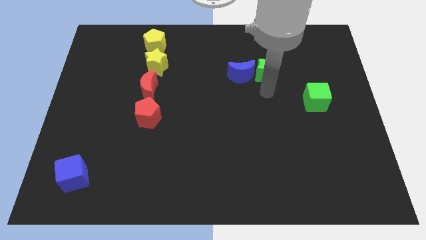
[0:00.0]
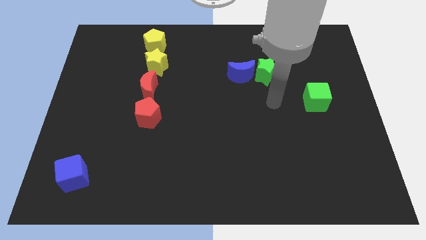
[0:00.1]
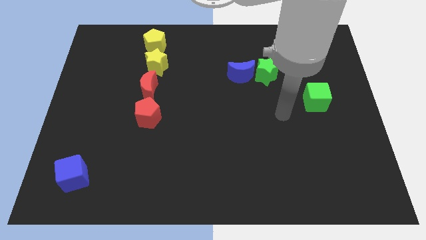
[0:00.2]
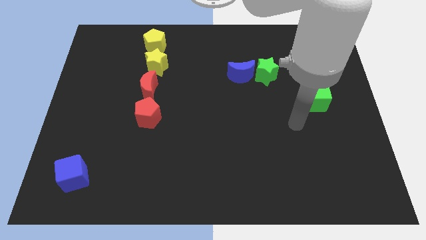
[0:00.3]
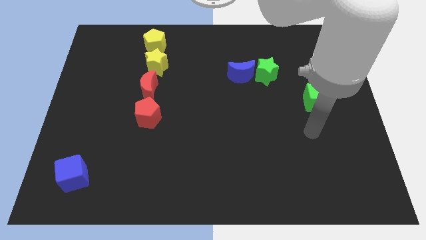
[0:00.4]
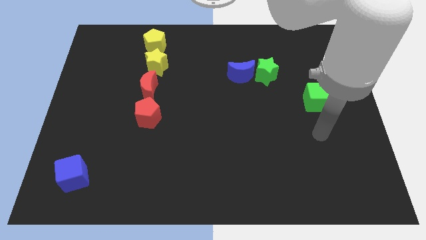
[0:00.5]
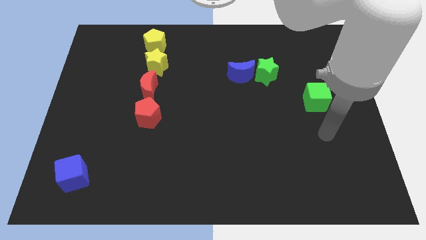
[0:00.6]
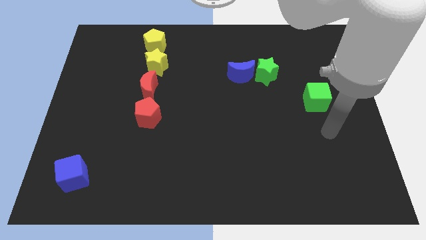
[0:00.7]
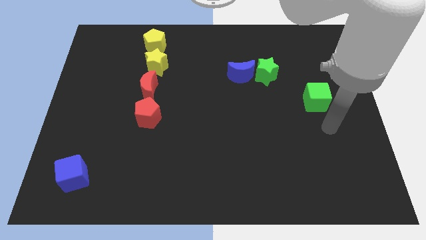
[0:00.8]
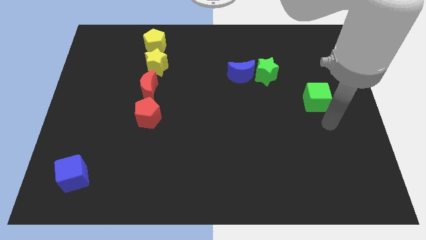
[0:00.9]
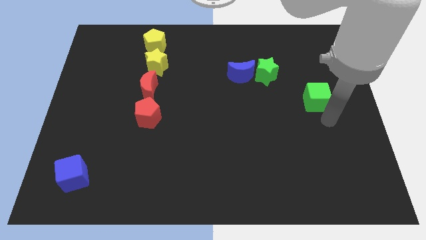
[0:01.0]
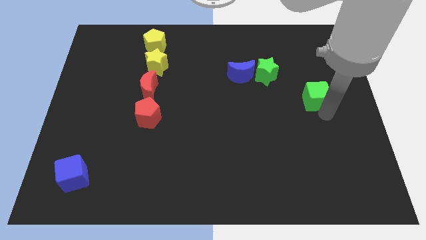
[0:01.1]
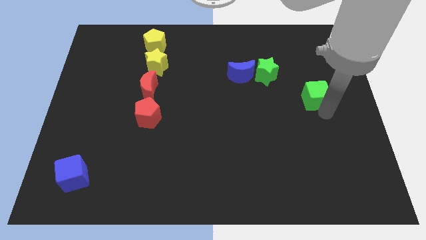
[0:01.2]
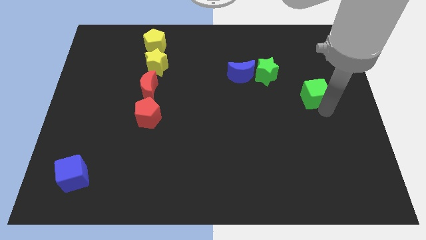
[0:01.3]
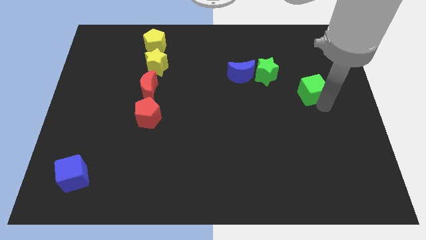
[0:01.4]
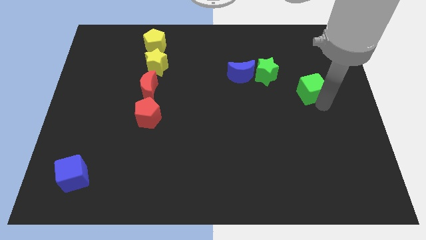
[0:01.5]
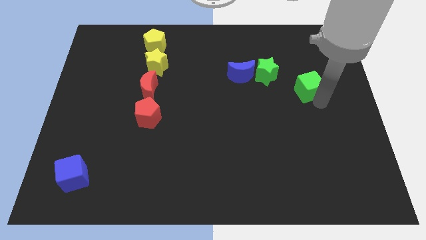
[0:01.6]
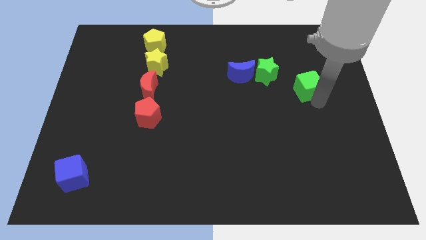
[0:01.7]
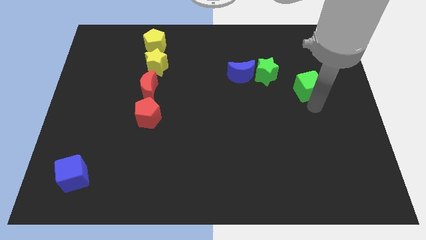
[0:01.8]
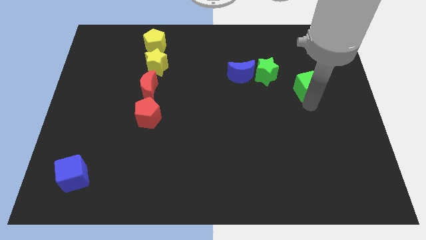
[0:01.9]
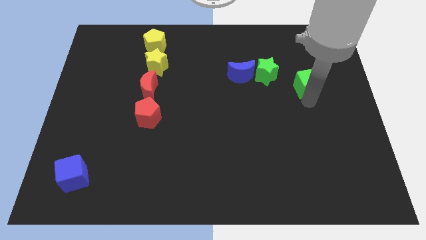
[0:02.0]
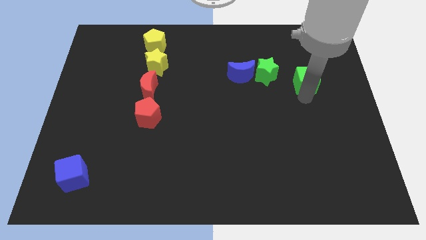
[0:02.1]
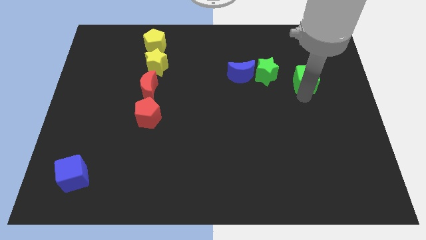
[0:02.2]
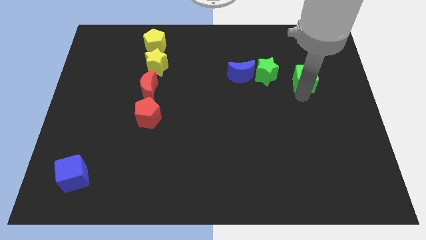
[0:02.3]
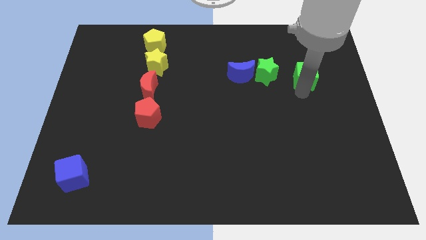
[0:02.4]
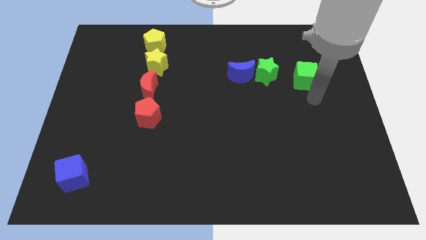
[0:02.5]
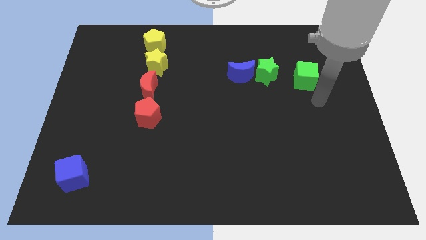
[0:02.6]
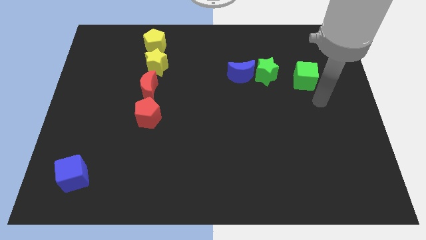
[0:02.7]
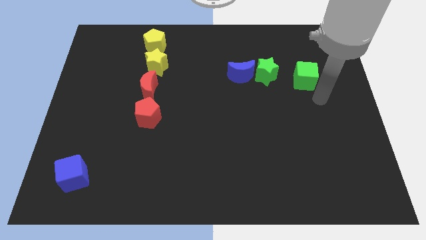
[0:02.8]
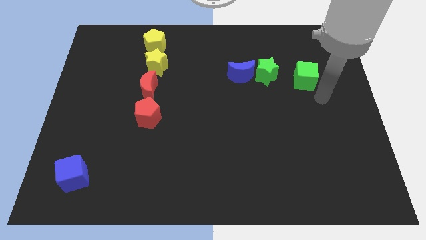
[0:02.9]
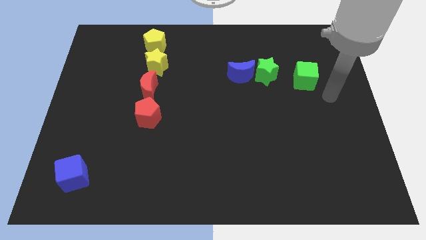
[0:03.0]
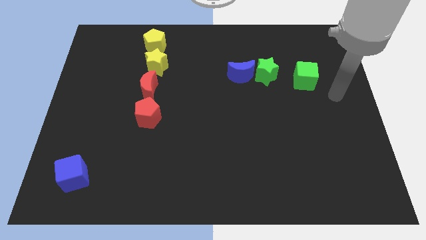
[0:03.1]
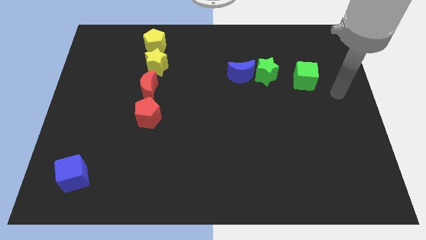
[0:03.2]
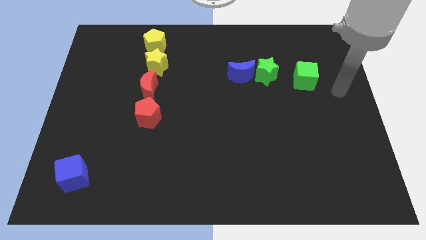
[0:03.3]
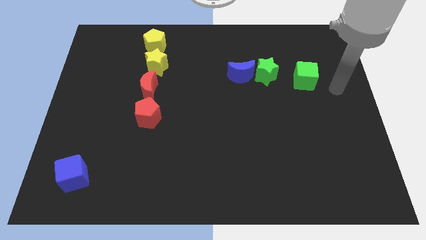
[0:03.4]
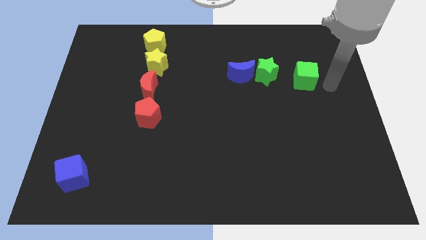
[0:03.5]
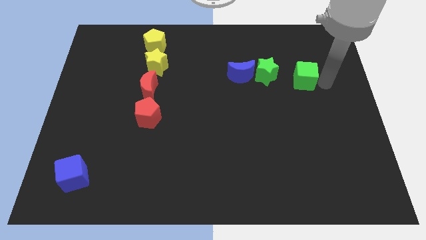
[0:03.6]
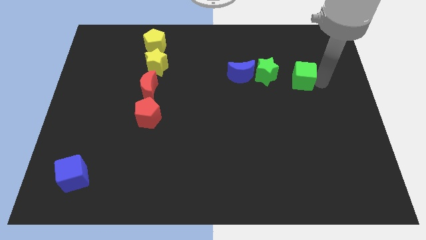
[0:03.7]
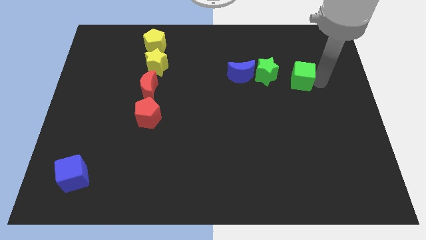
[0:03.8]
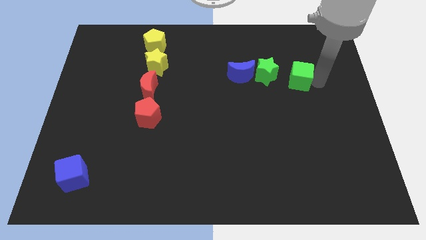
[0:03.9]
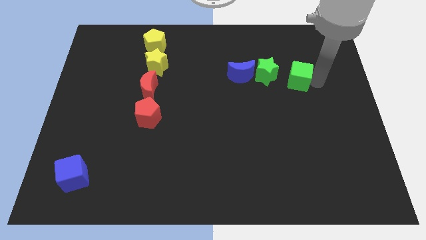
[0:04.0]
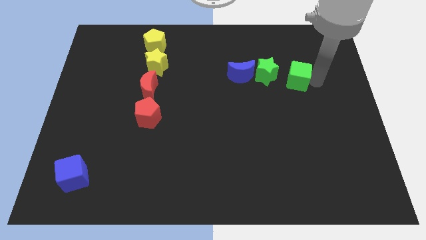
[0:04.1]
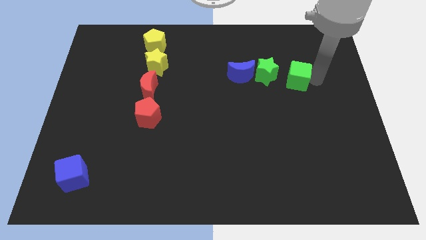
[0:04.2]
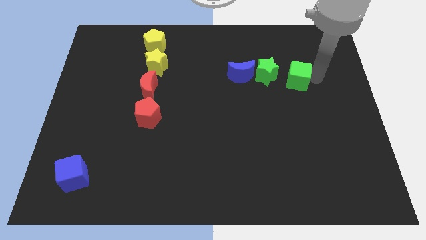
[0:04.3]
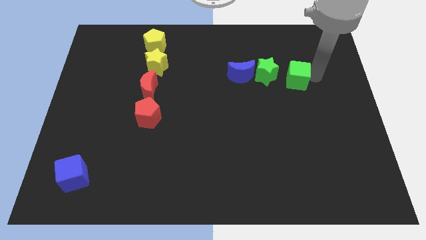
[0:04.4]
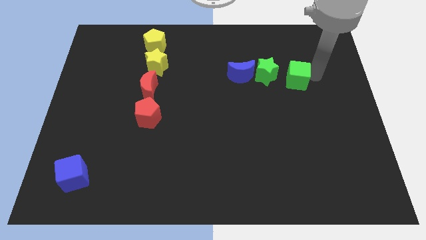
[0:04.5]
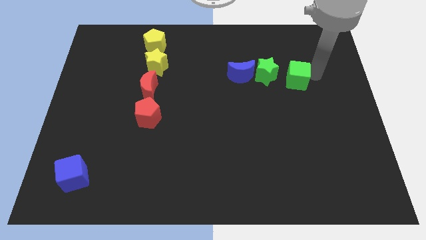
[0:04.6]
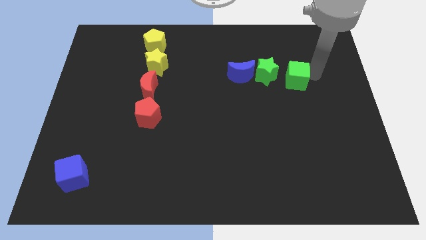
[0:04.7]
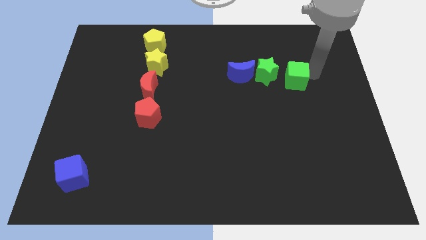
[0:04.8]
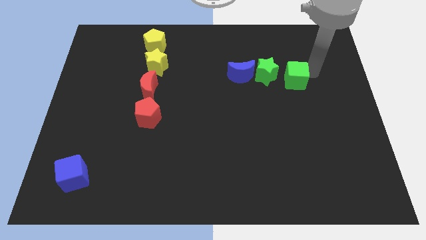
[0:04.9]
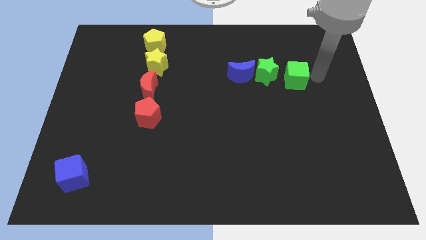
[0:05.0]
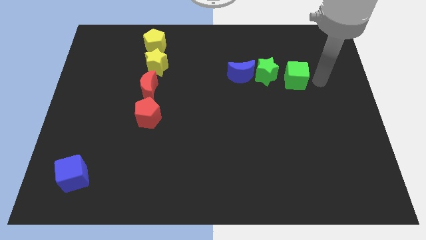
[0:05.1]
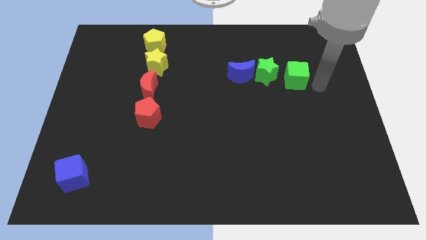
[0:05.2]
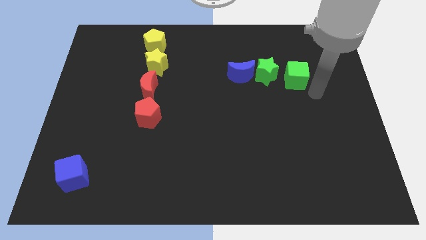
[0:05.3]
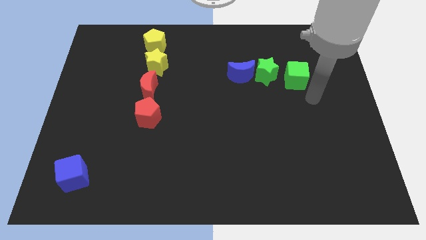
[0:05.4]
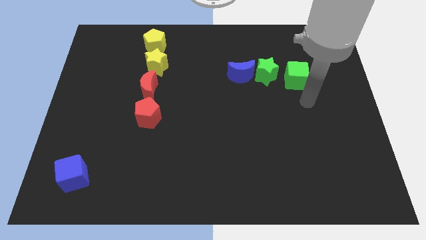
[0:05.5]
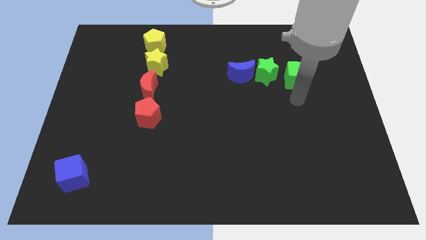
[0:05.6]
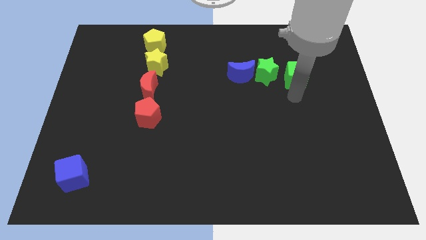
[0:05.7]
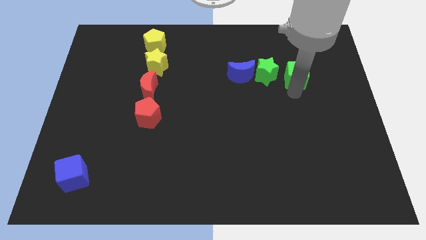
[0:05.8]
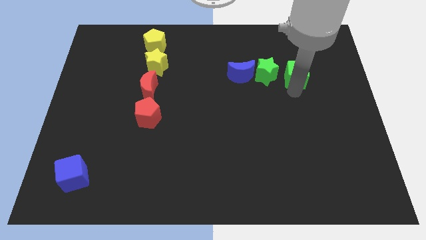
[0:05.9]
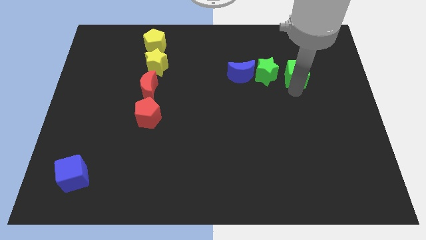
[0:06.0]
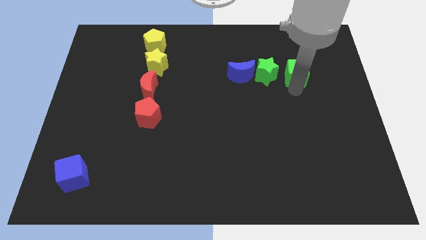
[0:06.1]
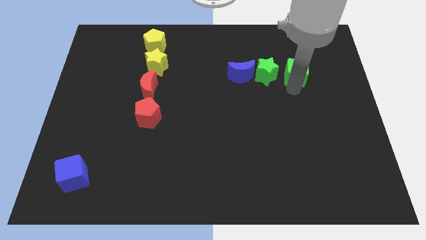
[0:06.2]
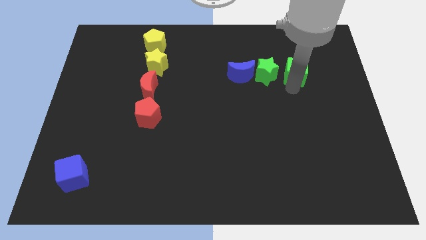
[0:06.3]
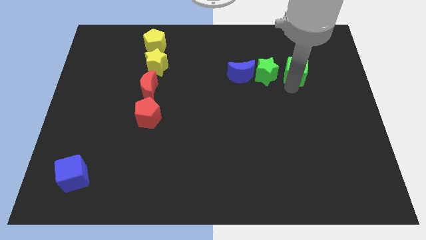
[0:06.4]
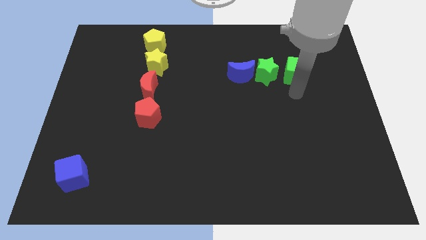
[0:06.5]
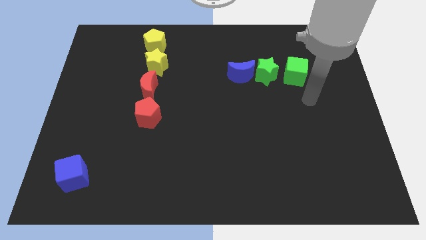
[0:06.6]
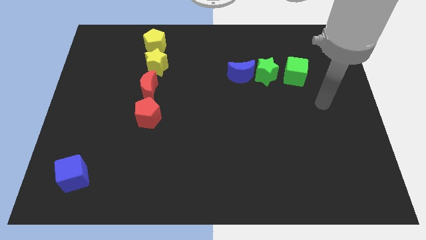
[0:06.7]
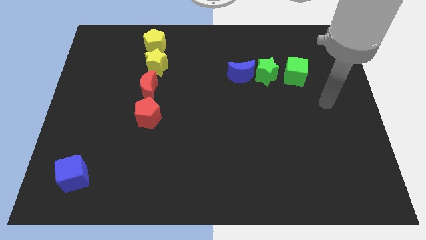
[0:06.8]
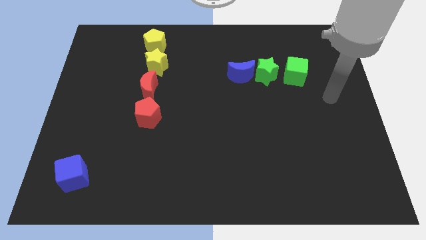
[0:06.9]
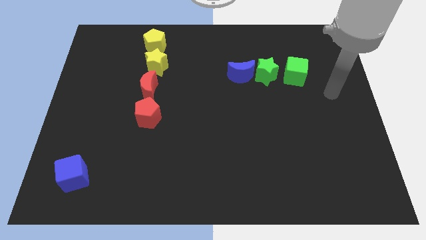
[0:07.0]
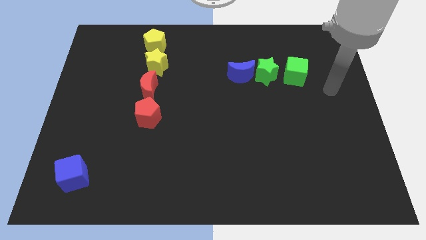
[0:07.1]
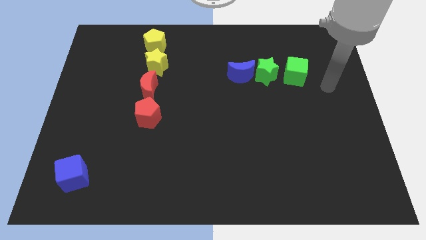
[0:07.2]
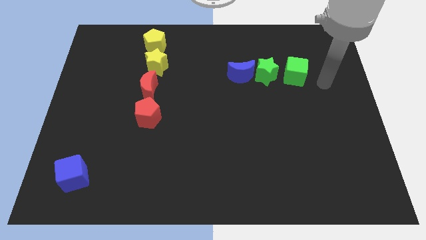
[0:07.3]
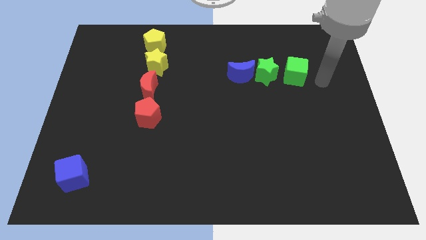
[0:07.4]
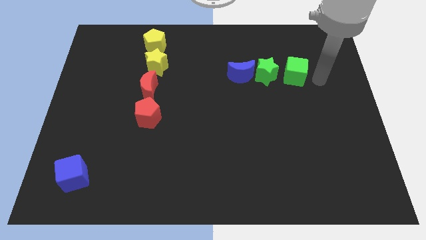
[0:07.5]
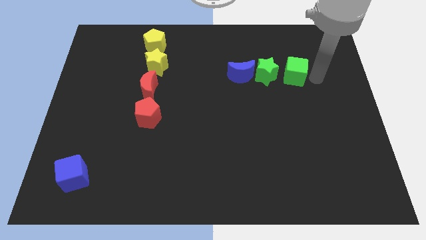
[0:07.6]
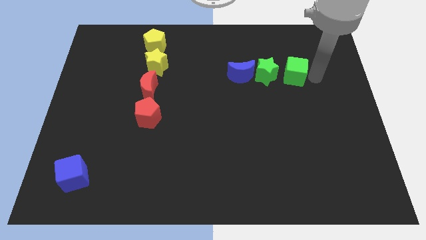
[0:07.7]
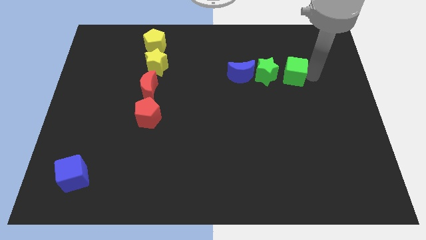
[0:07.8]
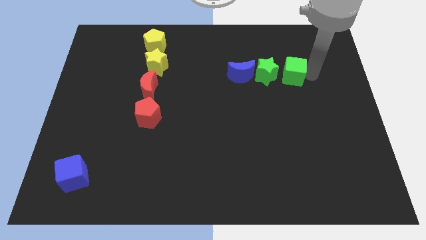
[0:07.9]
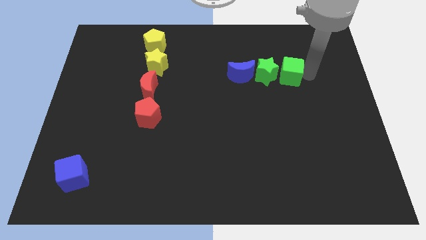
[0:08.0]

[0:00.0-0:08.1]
push the green cube to the right of the green star

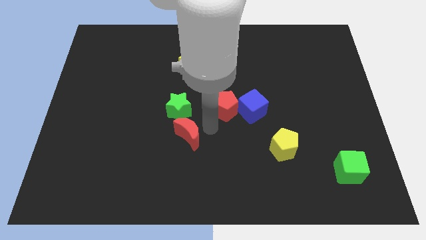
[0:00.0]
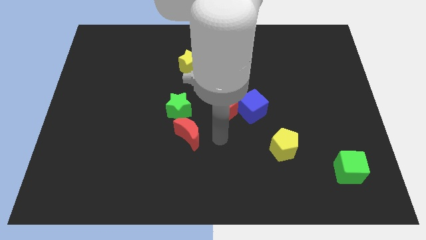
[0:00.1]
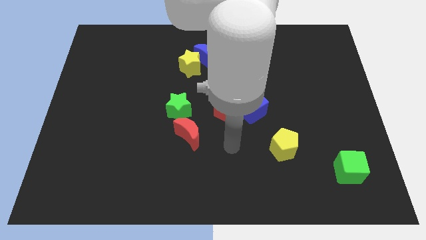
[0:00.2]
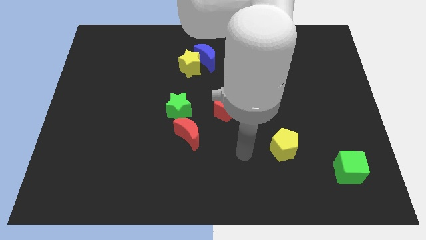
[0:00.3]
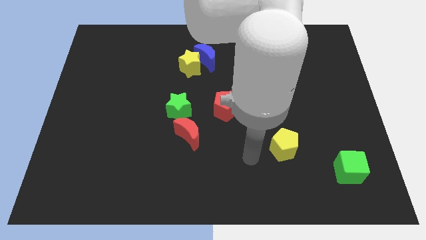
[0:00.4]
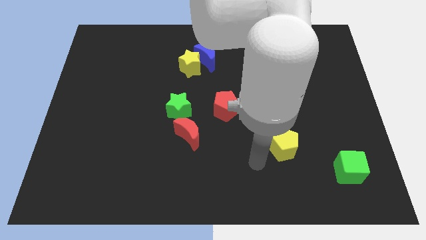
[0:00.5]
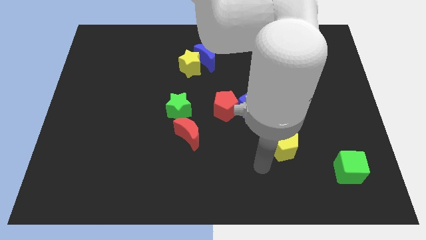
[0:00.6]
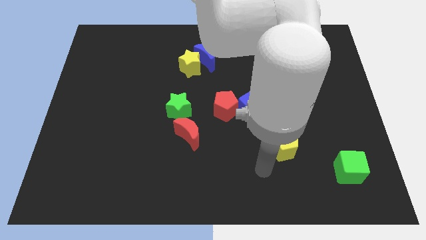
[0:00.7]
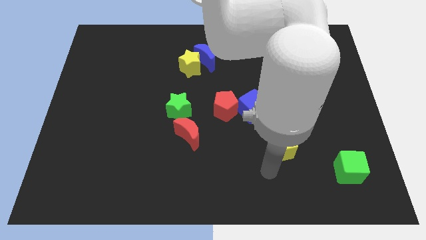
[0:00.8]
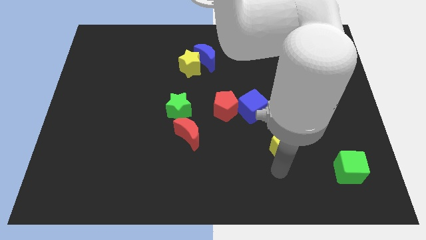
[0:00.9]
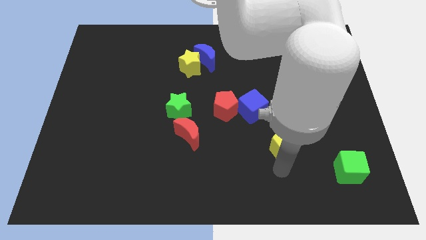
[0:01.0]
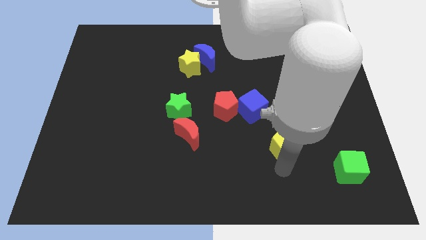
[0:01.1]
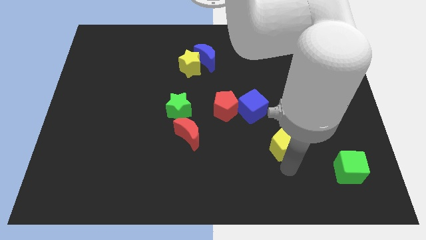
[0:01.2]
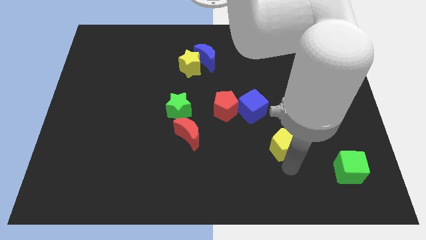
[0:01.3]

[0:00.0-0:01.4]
move the arm below to the yellow pentagon
